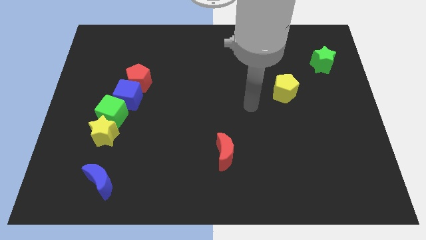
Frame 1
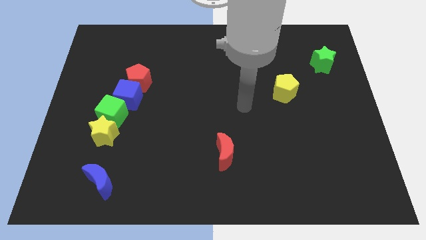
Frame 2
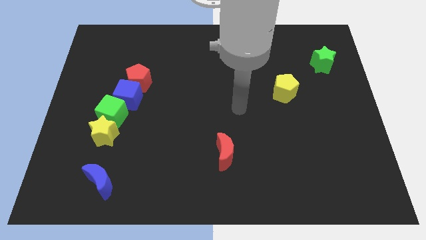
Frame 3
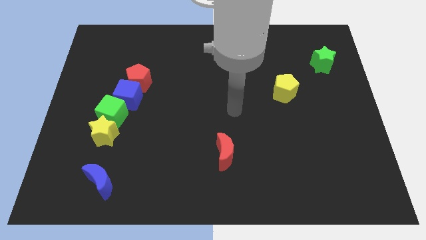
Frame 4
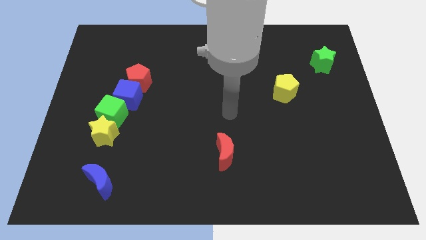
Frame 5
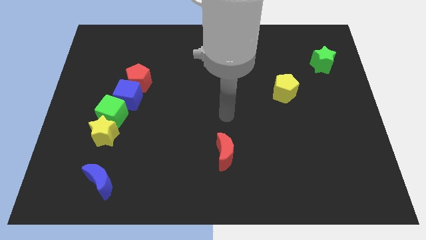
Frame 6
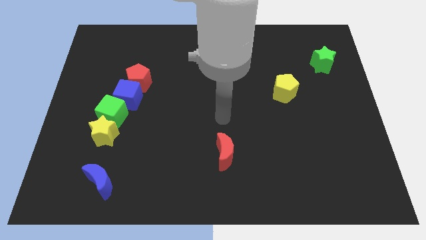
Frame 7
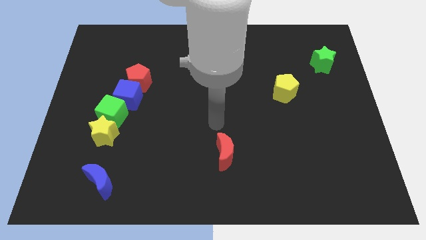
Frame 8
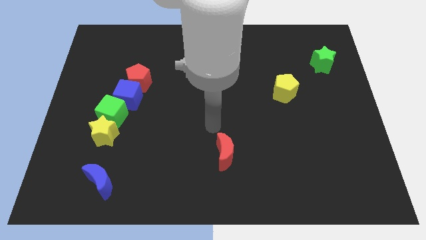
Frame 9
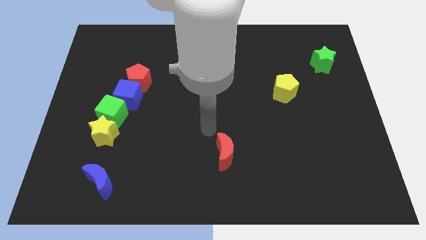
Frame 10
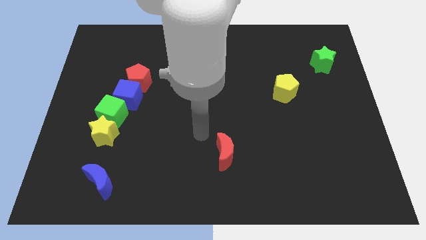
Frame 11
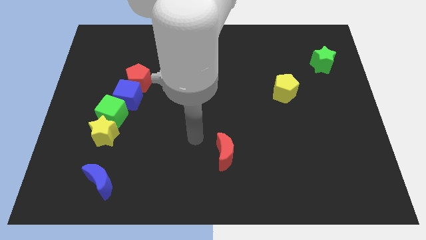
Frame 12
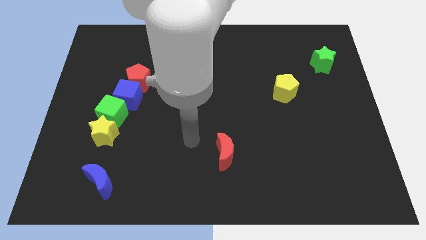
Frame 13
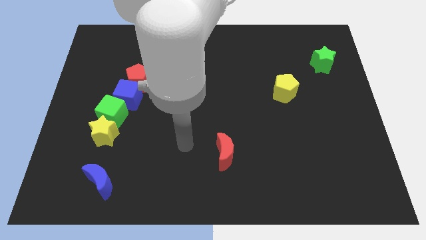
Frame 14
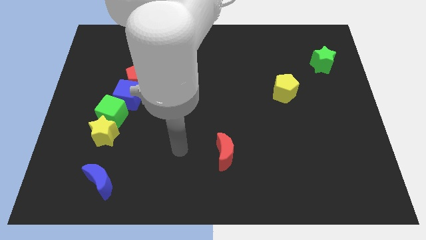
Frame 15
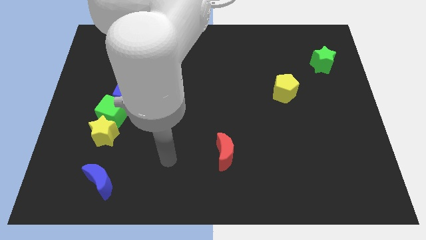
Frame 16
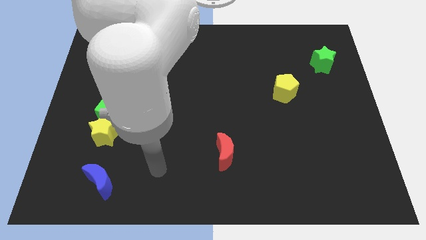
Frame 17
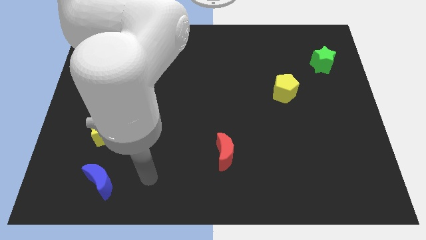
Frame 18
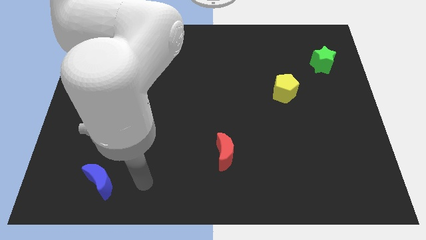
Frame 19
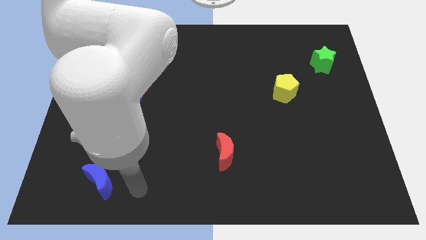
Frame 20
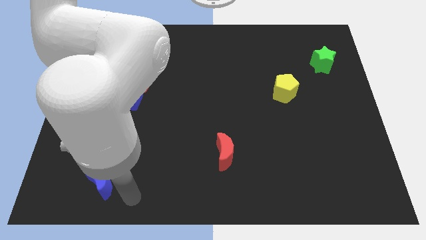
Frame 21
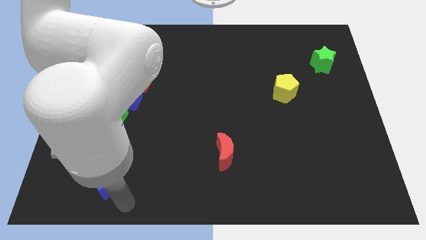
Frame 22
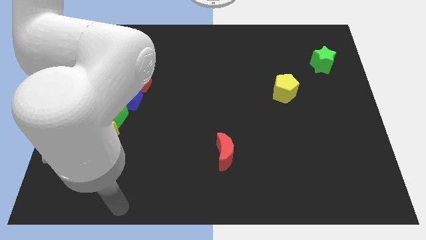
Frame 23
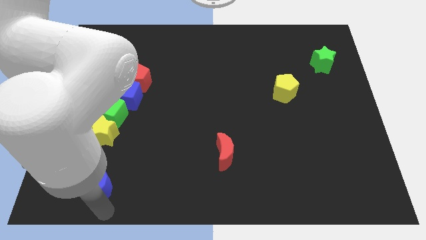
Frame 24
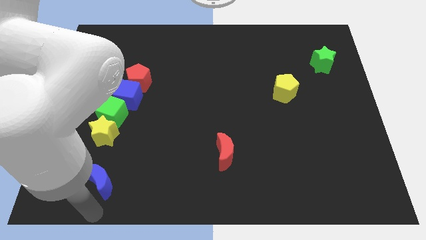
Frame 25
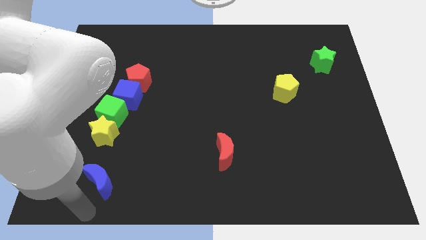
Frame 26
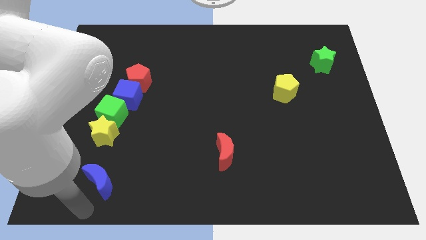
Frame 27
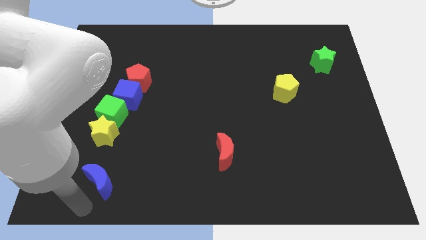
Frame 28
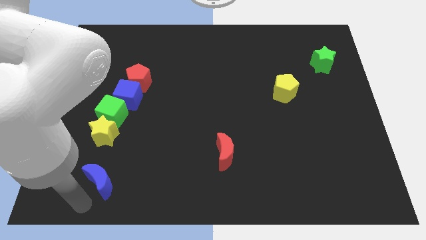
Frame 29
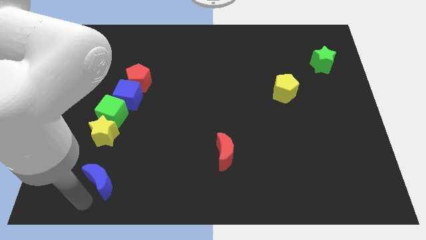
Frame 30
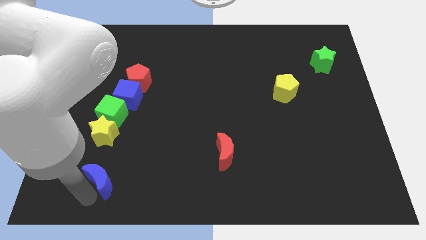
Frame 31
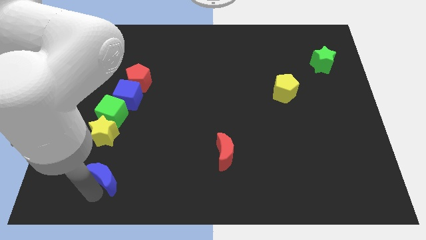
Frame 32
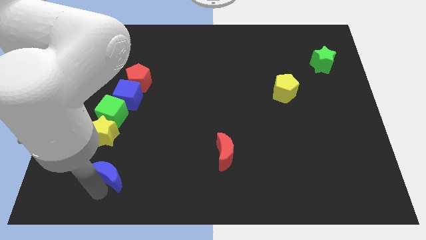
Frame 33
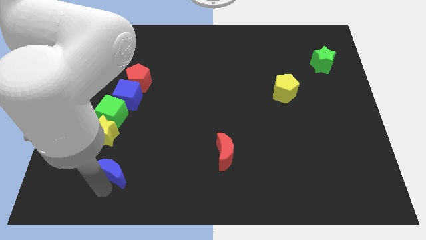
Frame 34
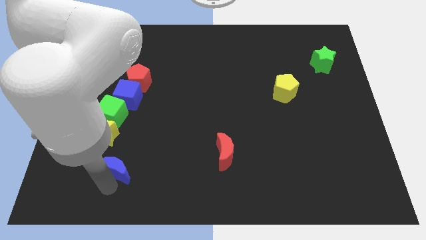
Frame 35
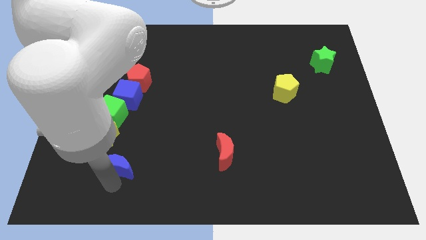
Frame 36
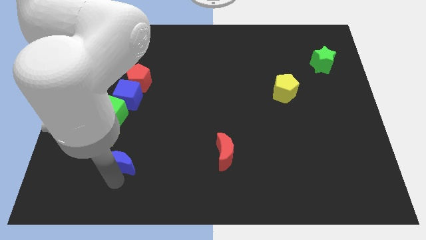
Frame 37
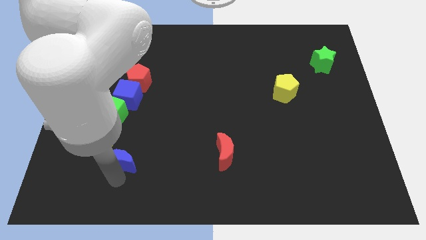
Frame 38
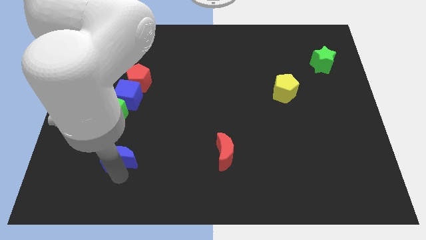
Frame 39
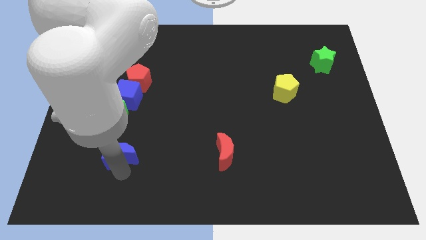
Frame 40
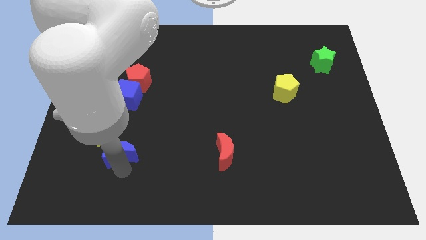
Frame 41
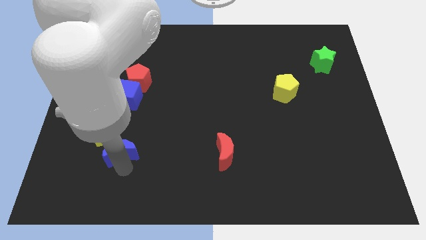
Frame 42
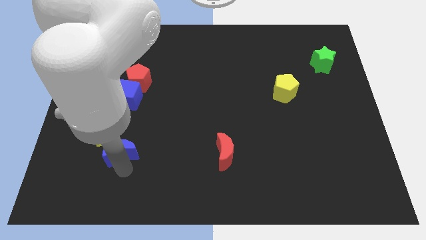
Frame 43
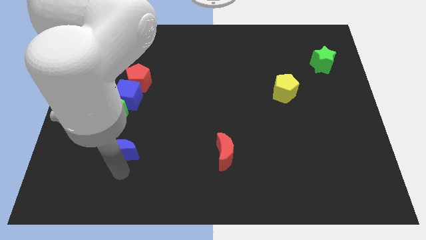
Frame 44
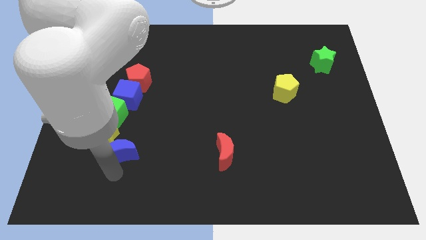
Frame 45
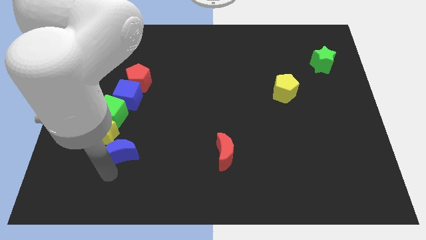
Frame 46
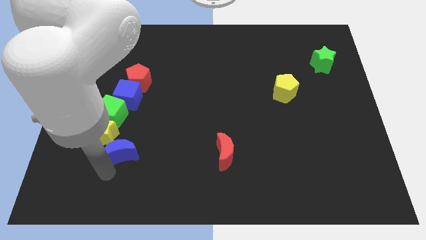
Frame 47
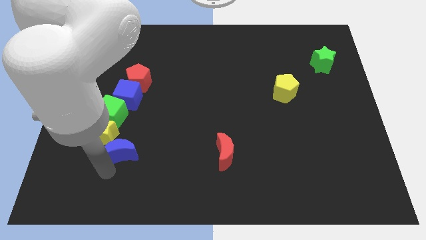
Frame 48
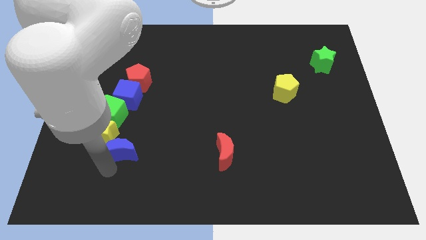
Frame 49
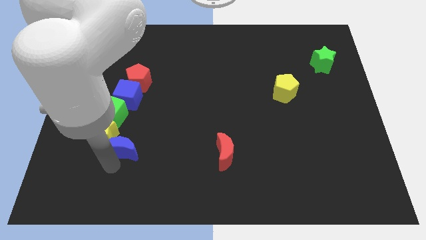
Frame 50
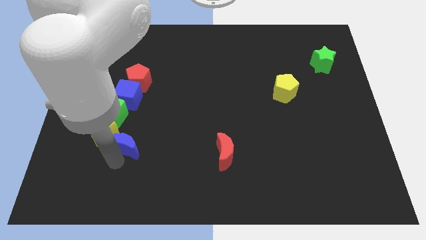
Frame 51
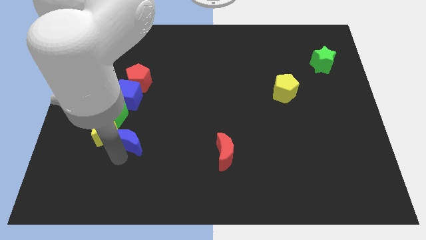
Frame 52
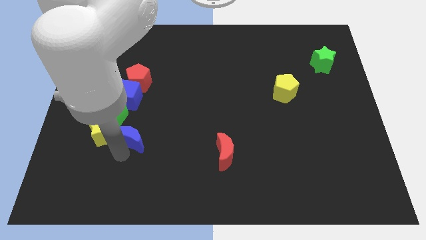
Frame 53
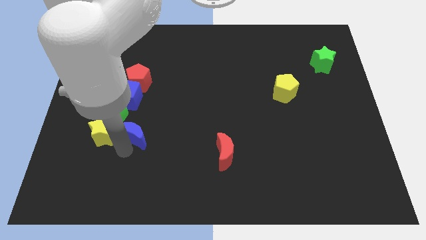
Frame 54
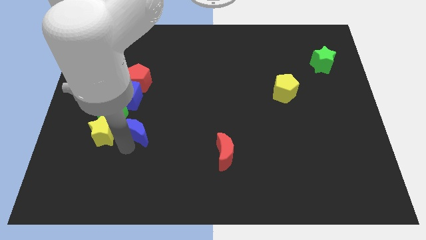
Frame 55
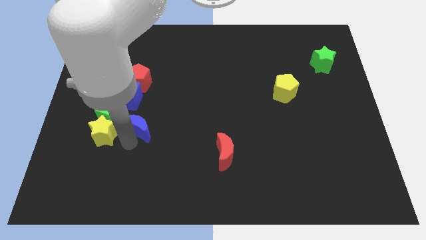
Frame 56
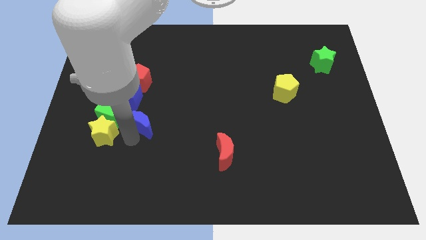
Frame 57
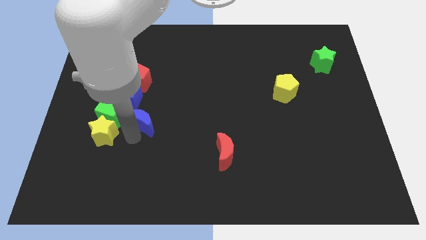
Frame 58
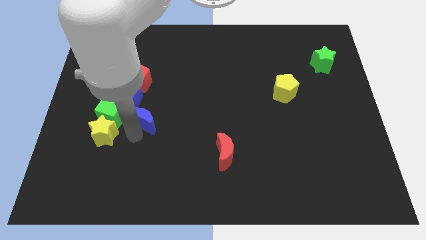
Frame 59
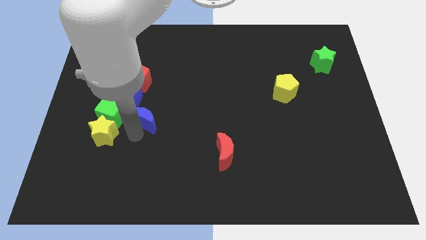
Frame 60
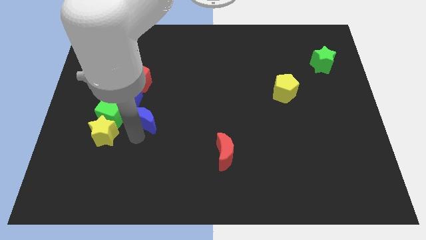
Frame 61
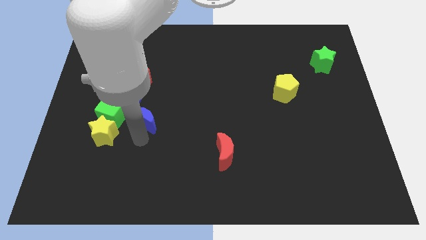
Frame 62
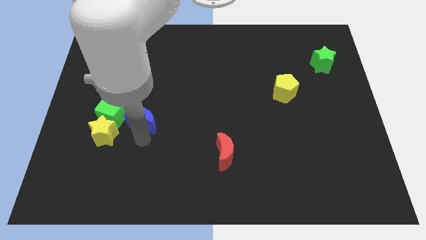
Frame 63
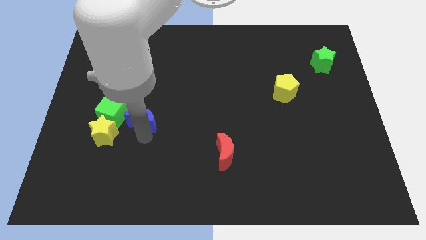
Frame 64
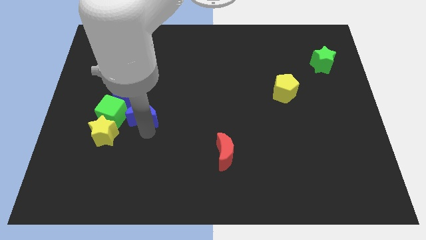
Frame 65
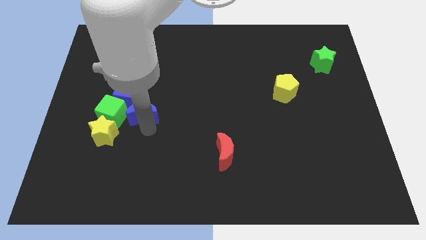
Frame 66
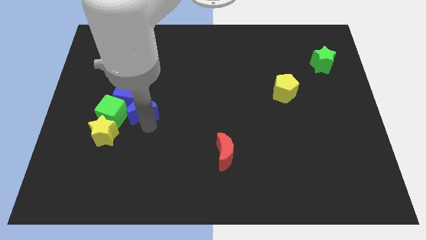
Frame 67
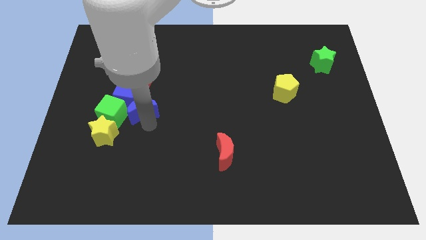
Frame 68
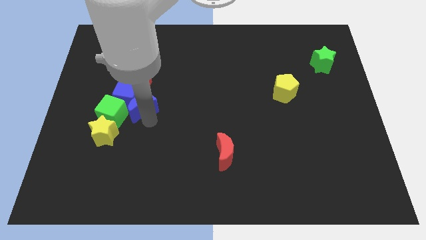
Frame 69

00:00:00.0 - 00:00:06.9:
put the blue moon to the blue cube

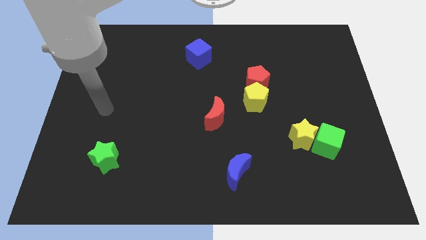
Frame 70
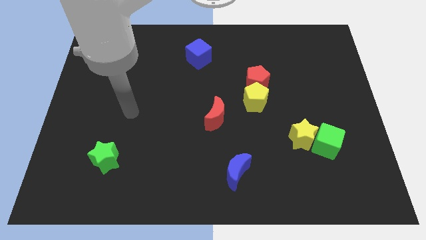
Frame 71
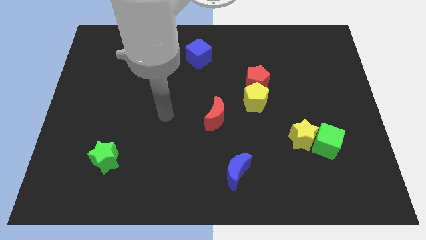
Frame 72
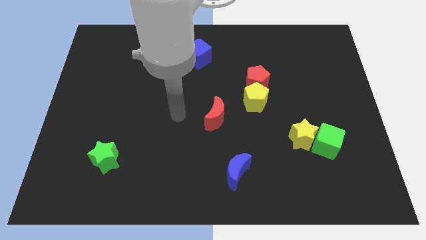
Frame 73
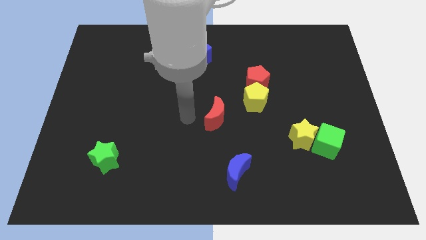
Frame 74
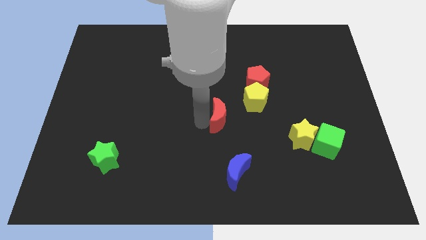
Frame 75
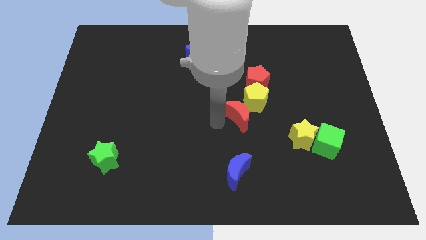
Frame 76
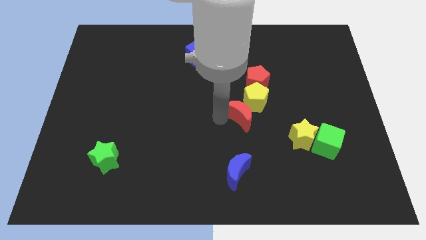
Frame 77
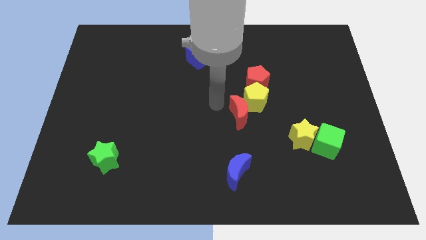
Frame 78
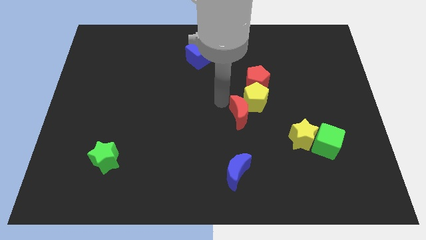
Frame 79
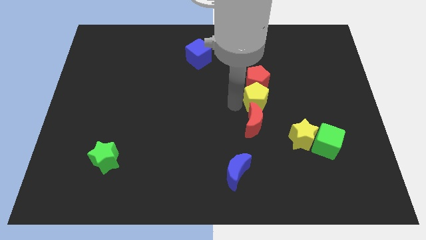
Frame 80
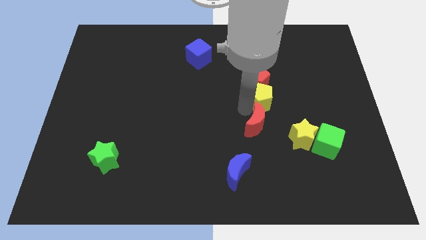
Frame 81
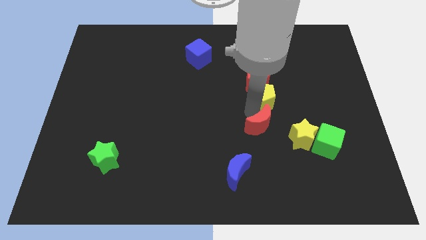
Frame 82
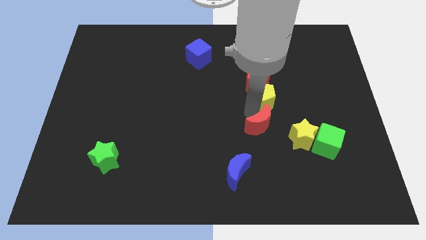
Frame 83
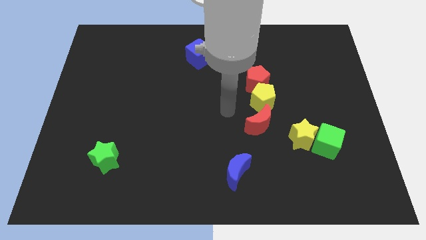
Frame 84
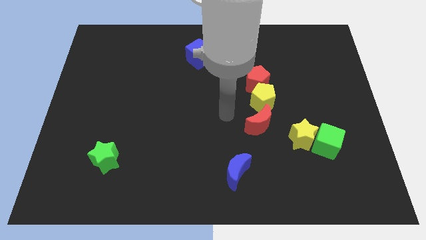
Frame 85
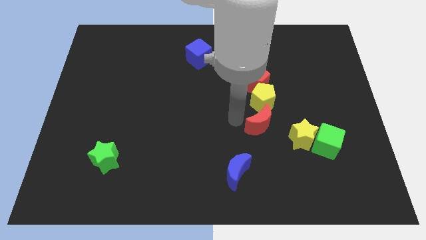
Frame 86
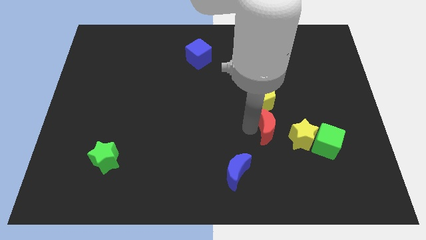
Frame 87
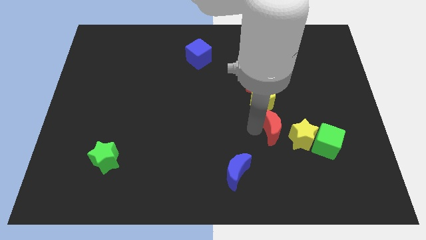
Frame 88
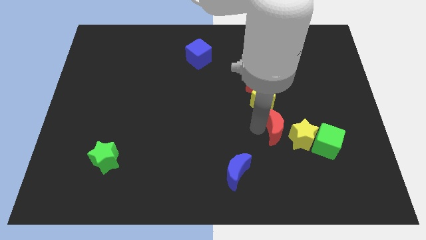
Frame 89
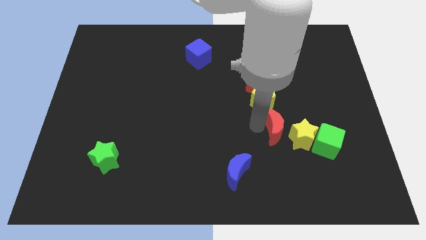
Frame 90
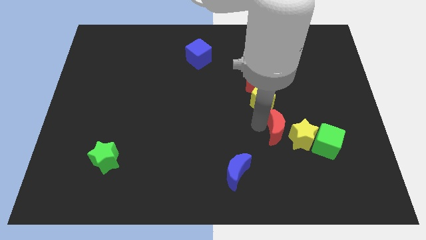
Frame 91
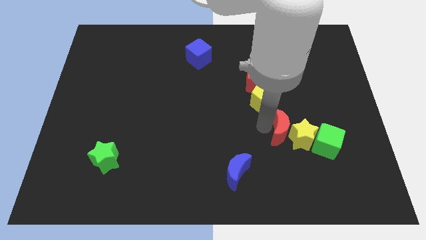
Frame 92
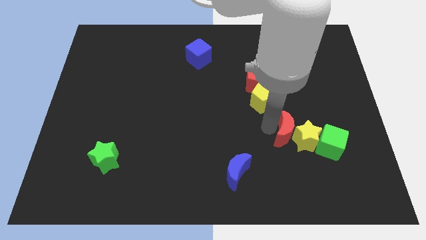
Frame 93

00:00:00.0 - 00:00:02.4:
put the red moon next to the yellow star
